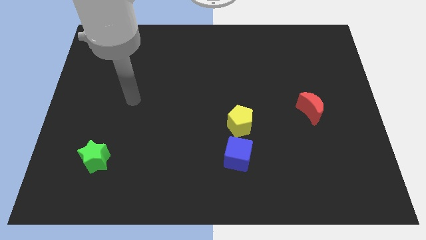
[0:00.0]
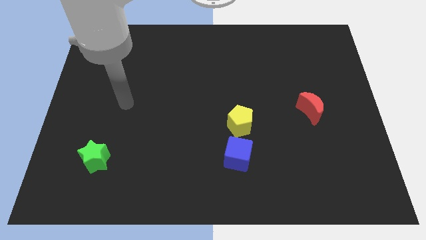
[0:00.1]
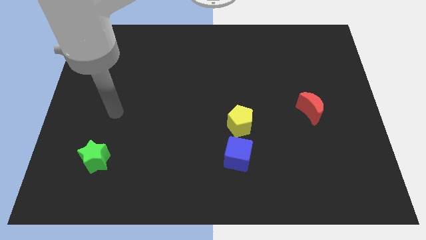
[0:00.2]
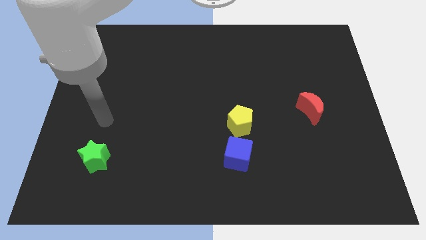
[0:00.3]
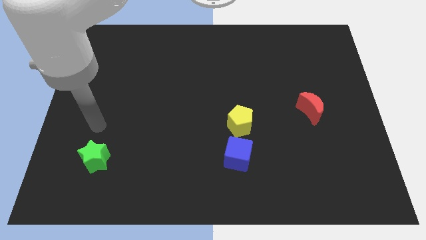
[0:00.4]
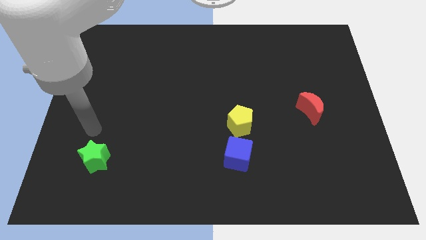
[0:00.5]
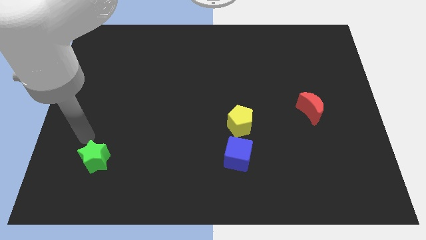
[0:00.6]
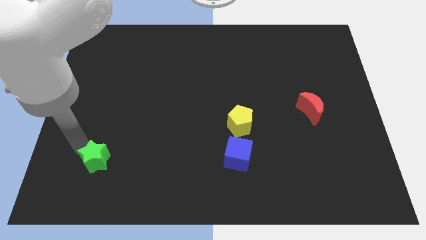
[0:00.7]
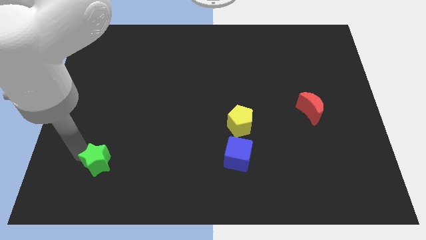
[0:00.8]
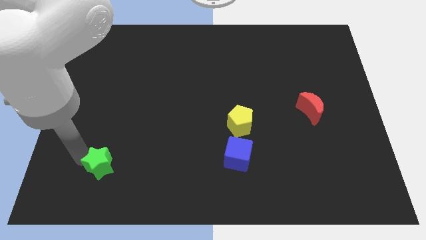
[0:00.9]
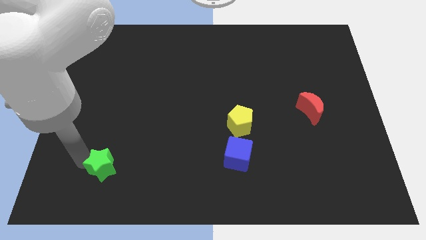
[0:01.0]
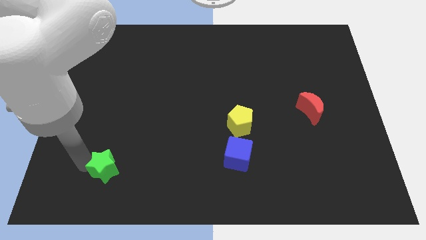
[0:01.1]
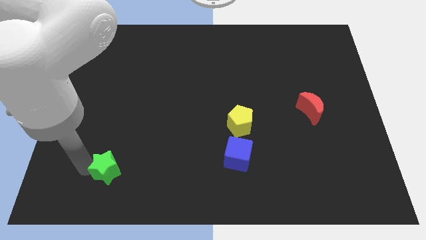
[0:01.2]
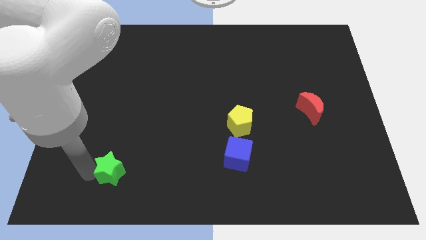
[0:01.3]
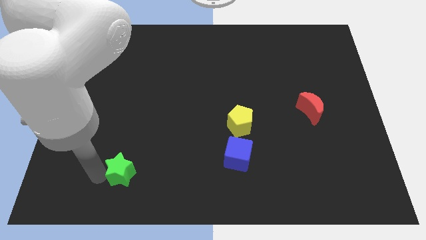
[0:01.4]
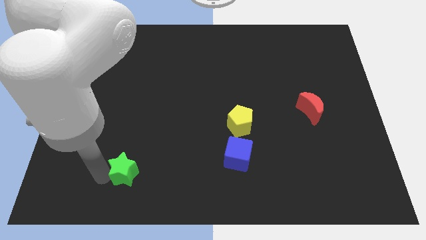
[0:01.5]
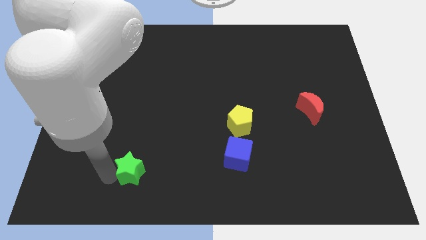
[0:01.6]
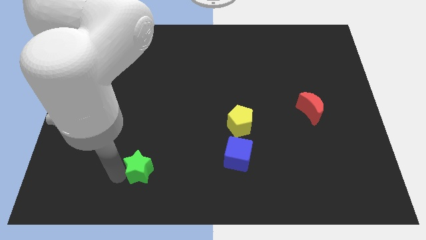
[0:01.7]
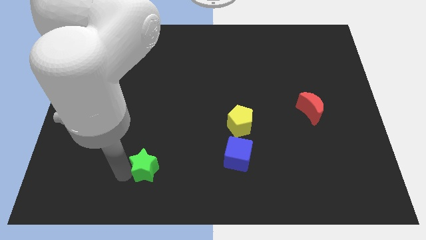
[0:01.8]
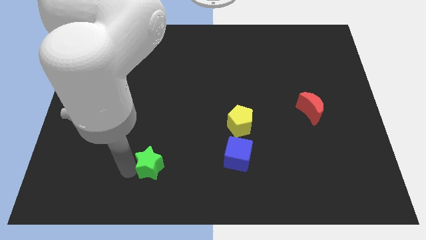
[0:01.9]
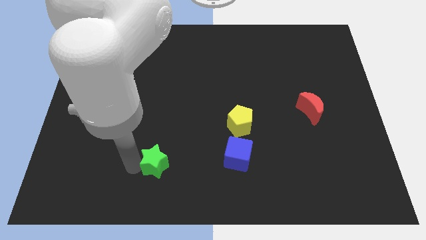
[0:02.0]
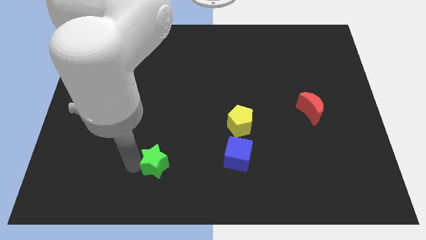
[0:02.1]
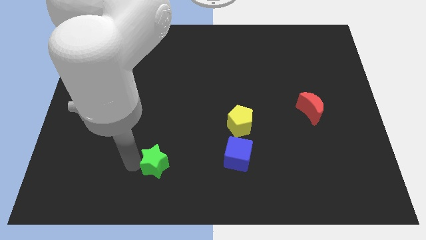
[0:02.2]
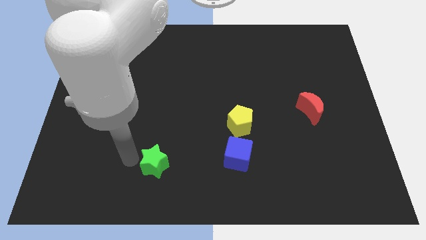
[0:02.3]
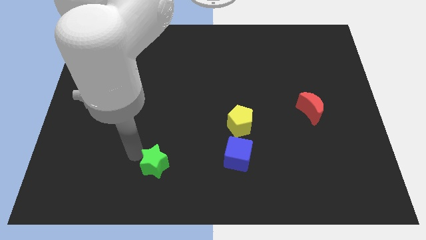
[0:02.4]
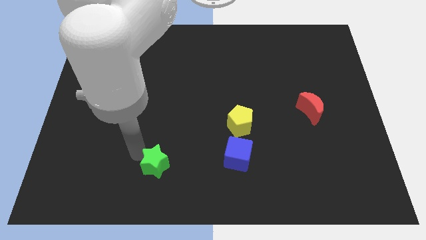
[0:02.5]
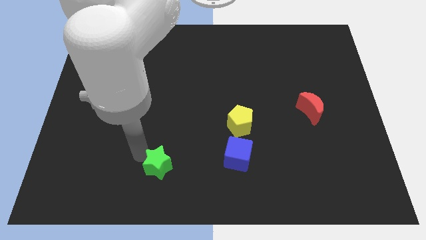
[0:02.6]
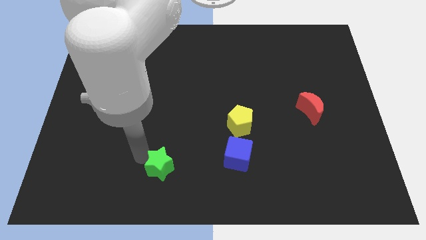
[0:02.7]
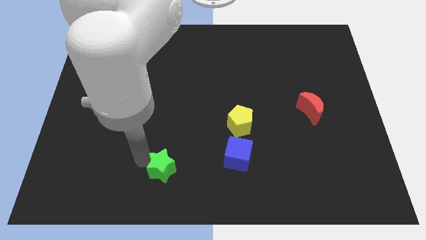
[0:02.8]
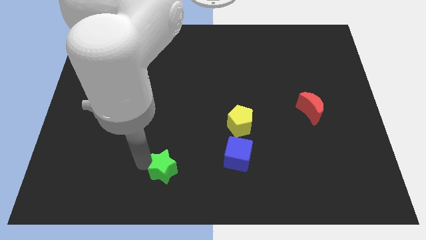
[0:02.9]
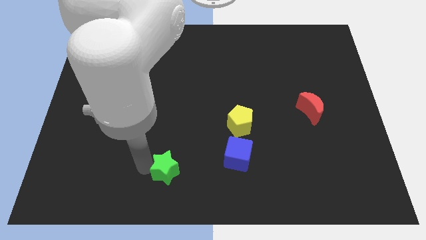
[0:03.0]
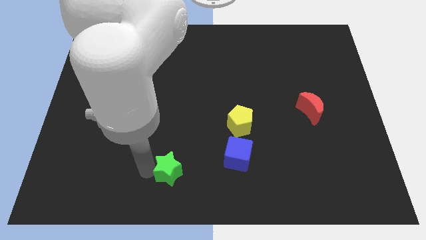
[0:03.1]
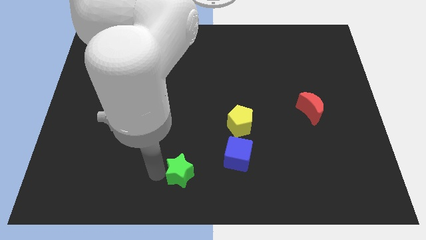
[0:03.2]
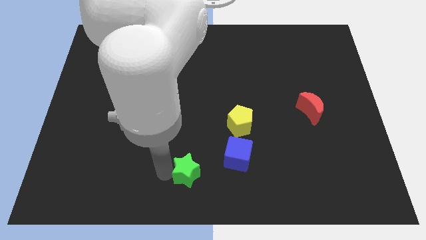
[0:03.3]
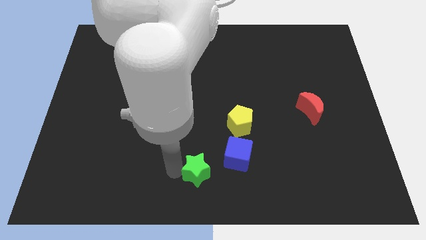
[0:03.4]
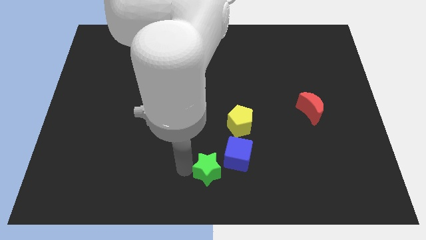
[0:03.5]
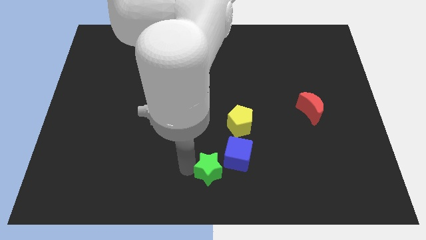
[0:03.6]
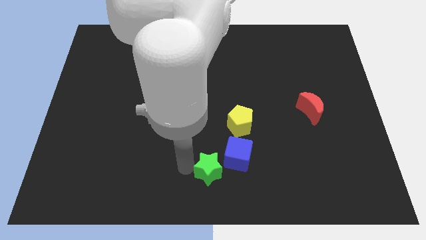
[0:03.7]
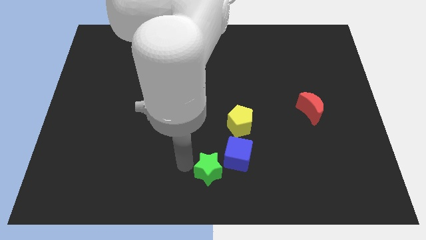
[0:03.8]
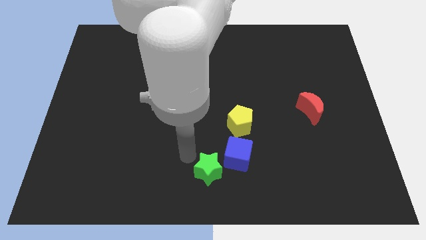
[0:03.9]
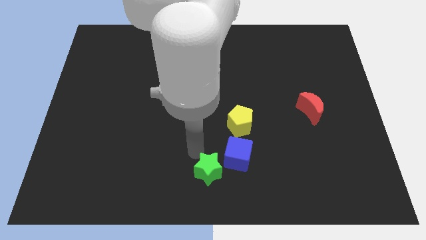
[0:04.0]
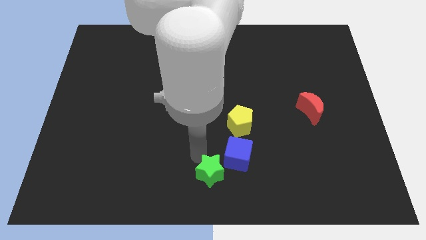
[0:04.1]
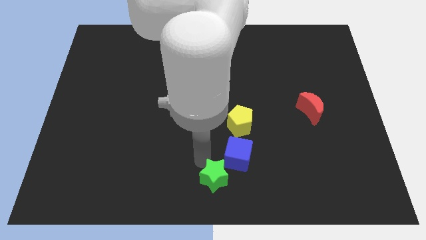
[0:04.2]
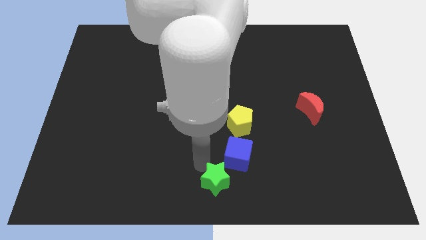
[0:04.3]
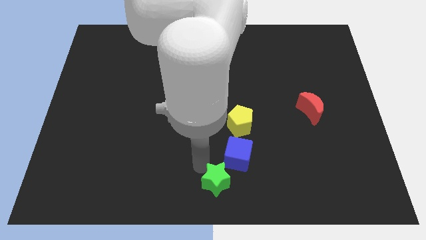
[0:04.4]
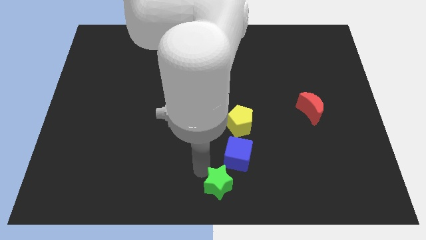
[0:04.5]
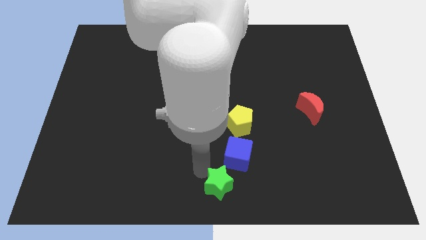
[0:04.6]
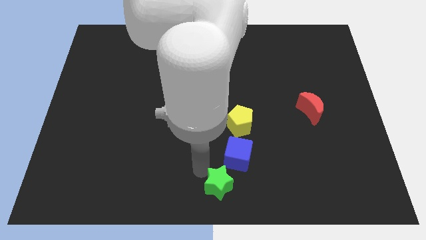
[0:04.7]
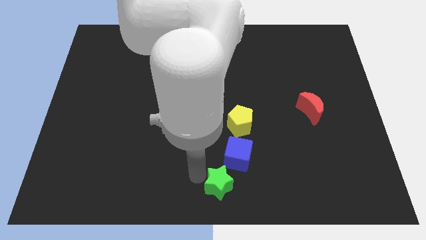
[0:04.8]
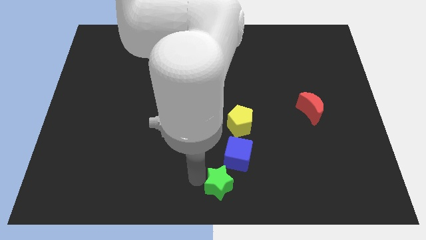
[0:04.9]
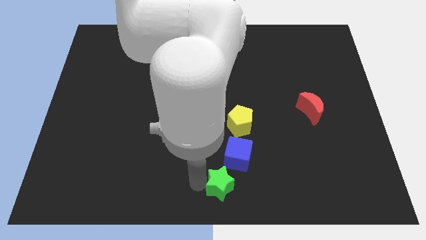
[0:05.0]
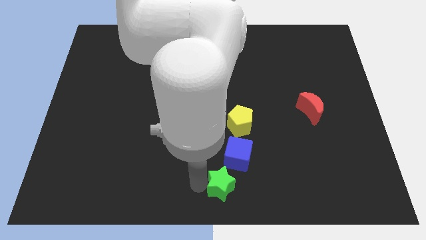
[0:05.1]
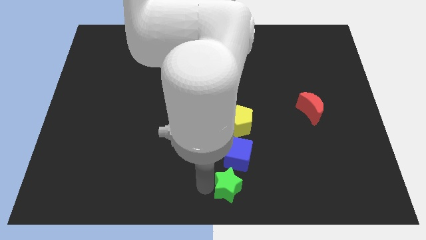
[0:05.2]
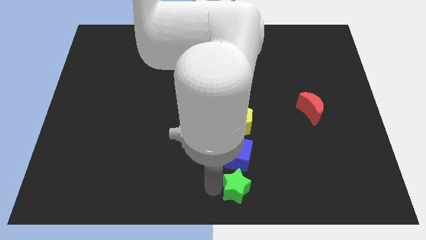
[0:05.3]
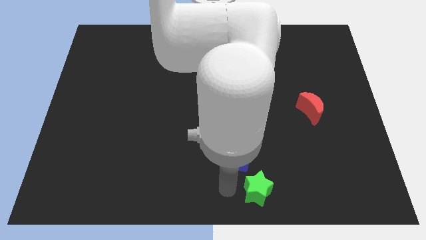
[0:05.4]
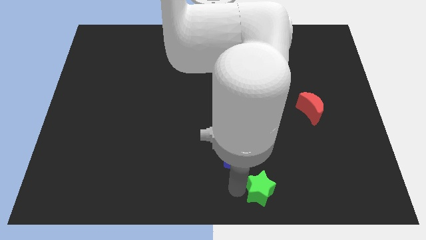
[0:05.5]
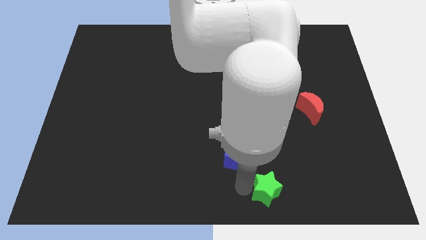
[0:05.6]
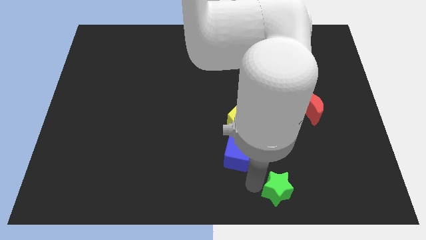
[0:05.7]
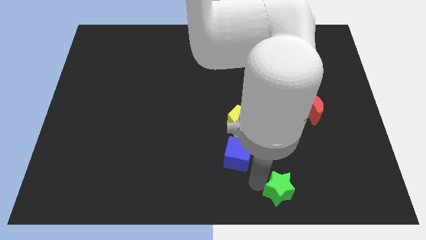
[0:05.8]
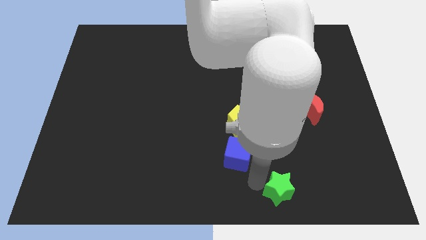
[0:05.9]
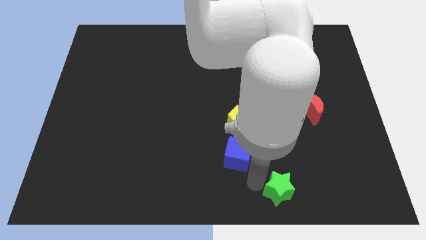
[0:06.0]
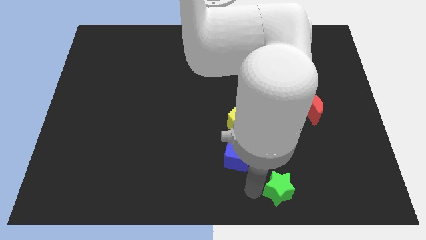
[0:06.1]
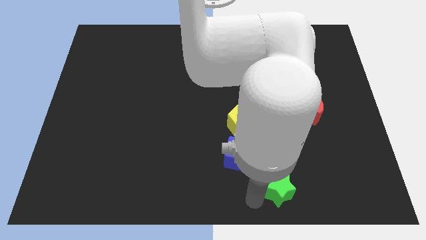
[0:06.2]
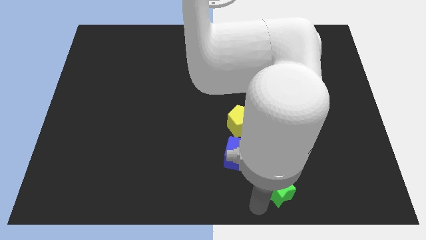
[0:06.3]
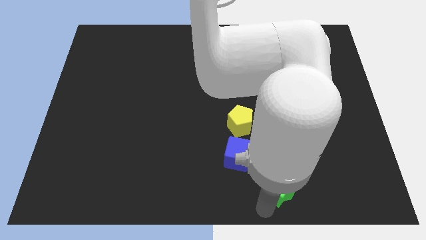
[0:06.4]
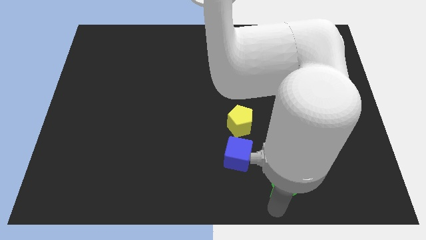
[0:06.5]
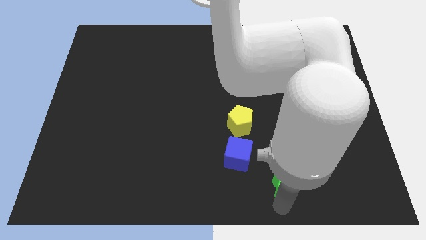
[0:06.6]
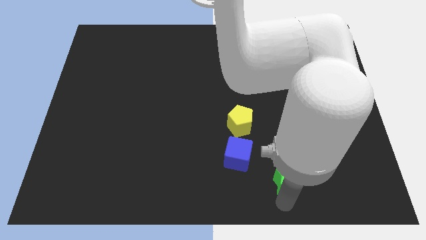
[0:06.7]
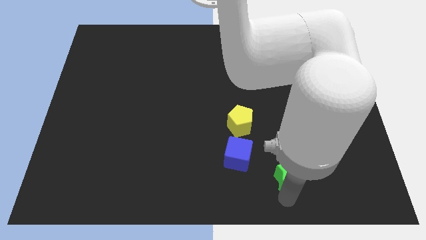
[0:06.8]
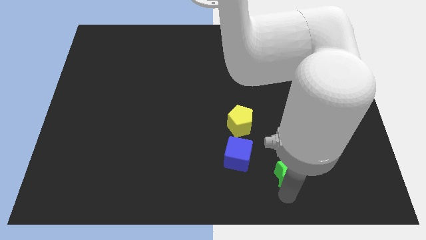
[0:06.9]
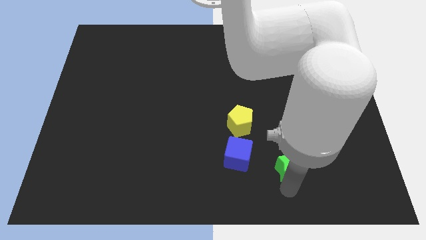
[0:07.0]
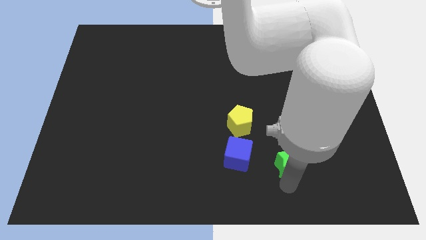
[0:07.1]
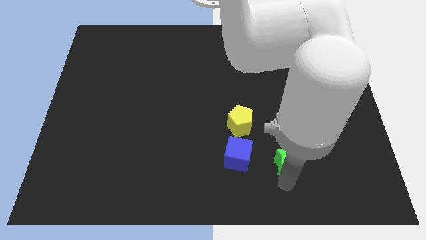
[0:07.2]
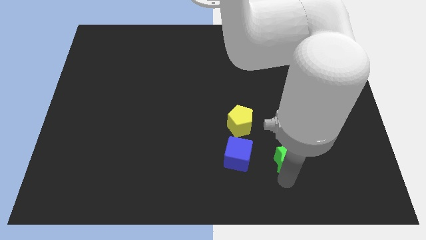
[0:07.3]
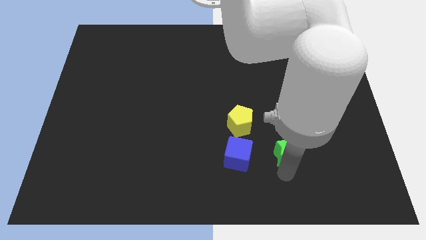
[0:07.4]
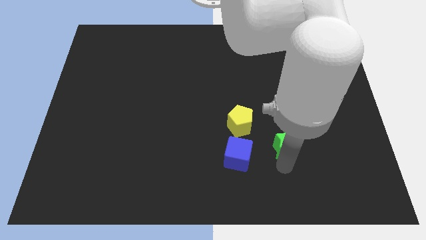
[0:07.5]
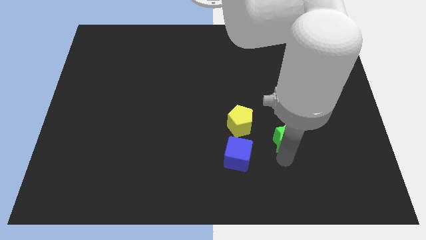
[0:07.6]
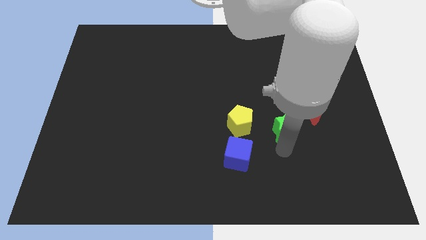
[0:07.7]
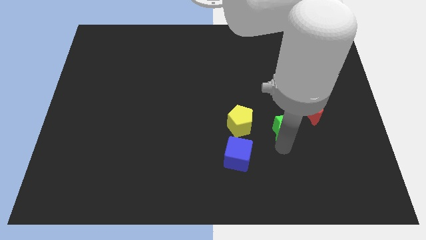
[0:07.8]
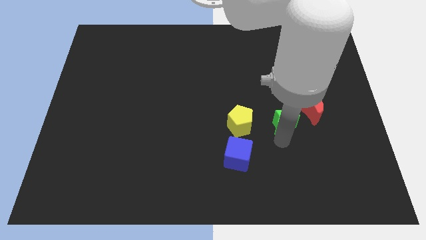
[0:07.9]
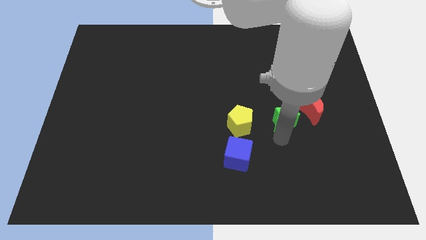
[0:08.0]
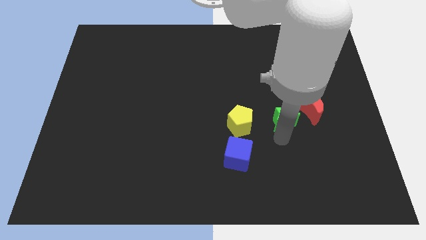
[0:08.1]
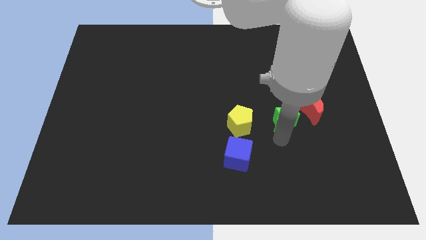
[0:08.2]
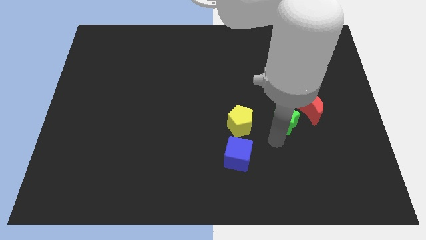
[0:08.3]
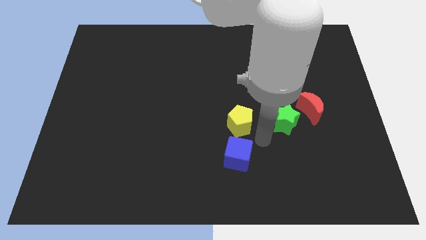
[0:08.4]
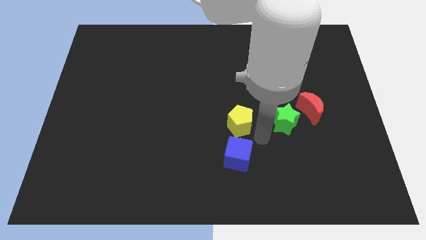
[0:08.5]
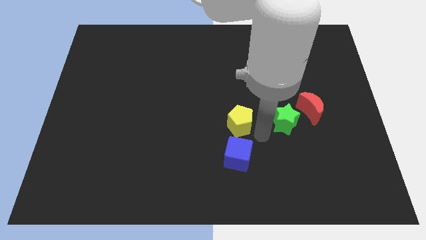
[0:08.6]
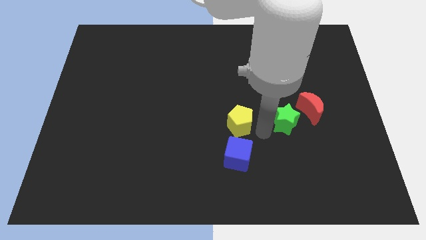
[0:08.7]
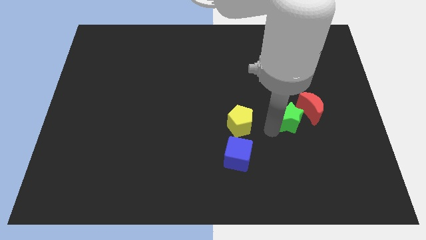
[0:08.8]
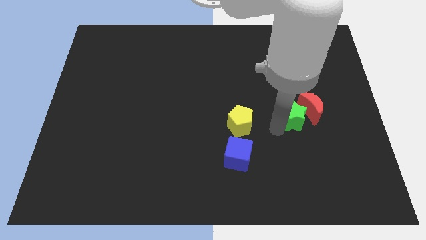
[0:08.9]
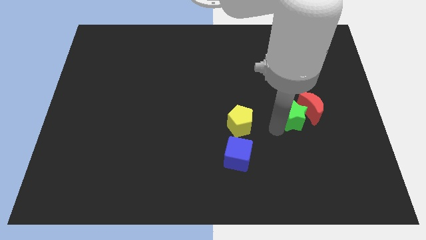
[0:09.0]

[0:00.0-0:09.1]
move the green block towards the red block
